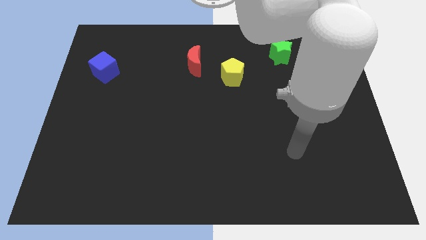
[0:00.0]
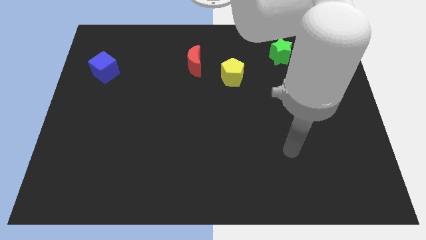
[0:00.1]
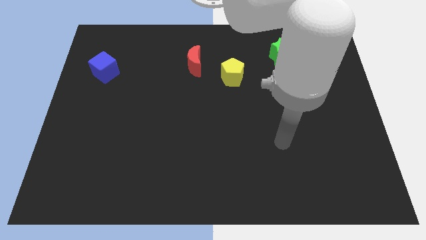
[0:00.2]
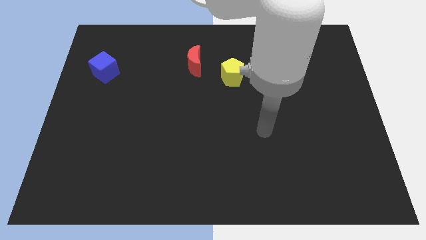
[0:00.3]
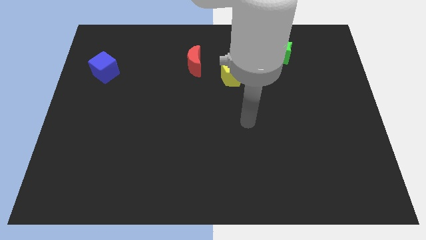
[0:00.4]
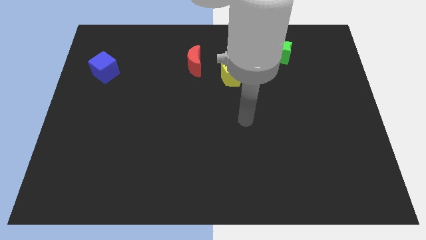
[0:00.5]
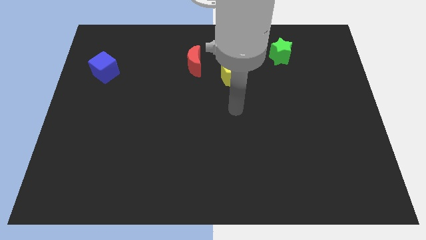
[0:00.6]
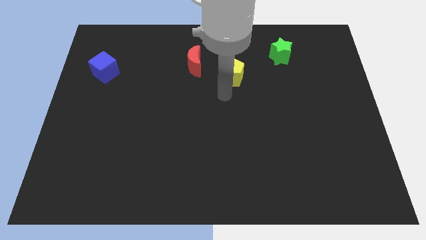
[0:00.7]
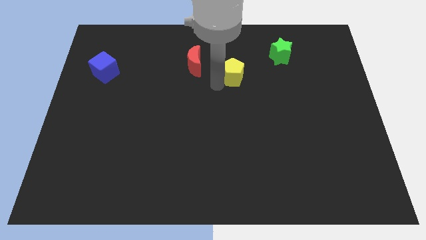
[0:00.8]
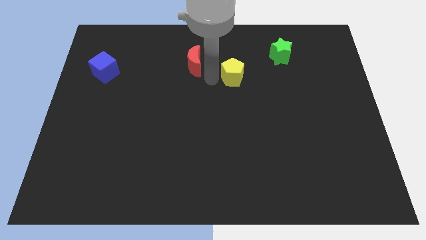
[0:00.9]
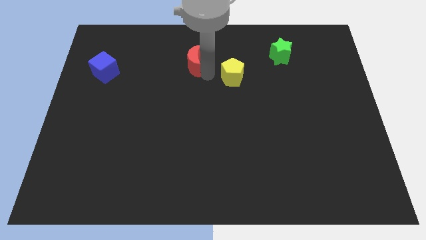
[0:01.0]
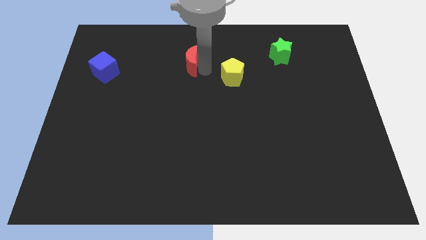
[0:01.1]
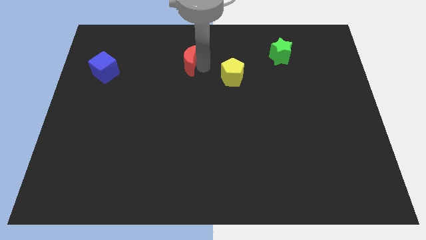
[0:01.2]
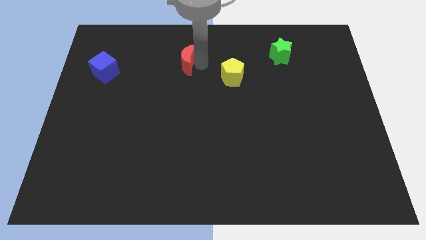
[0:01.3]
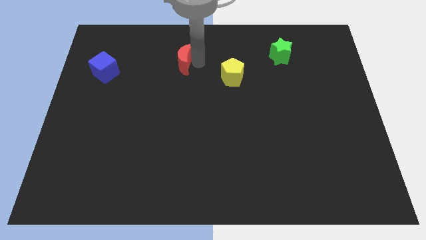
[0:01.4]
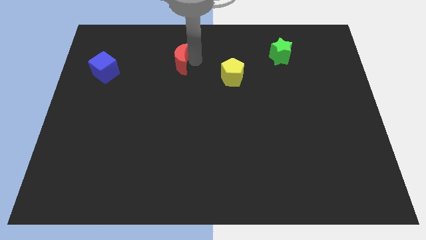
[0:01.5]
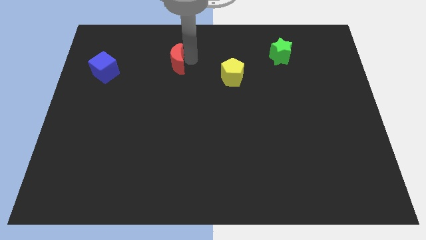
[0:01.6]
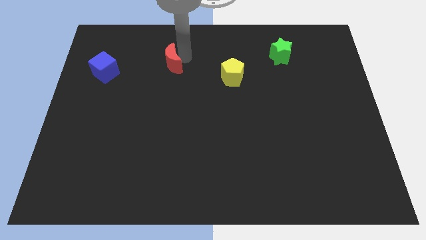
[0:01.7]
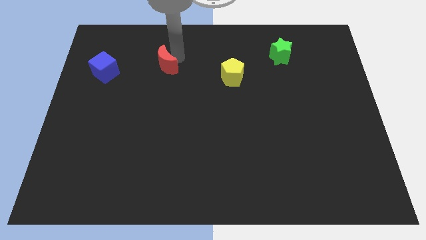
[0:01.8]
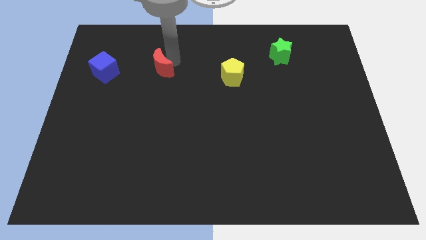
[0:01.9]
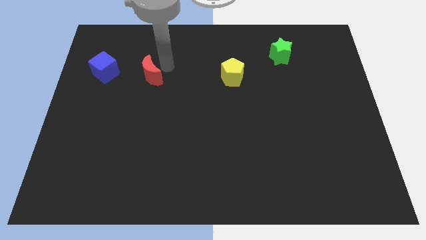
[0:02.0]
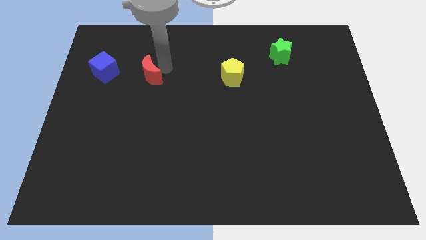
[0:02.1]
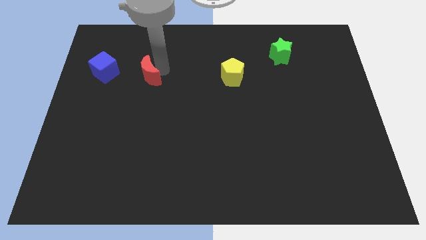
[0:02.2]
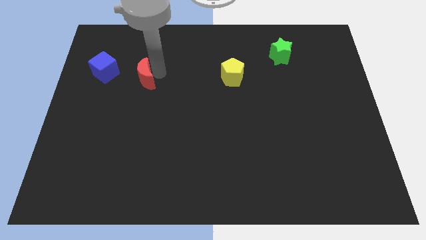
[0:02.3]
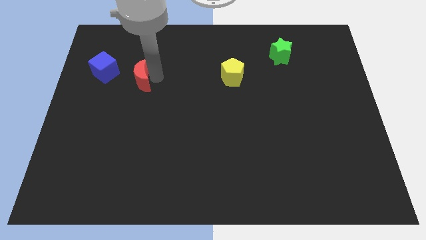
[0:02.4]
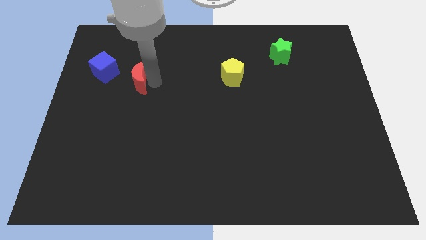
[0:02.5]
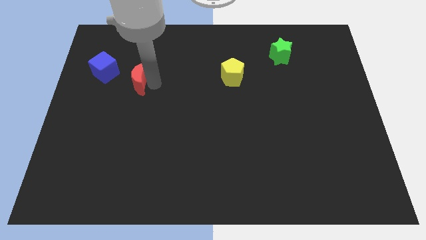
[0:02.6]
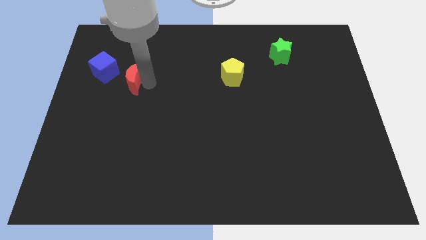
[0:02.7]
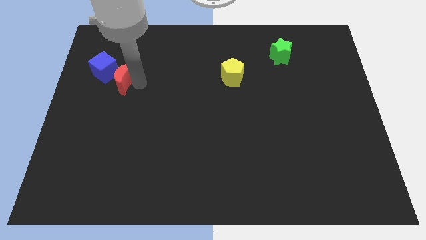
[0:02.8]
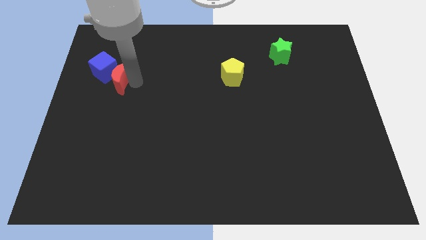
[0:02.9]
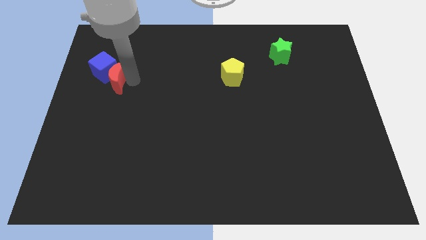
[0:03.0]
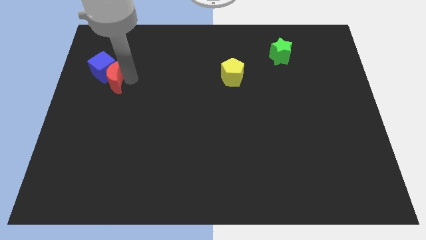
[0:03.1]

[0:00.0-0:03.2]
move the red block next to the blue block

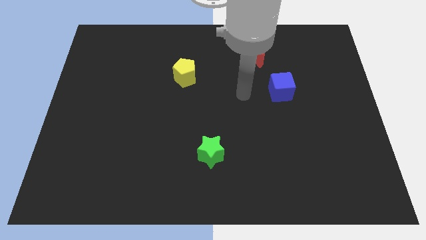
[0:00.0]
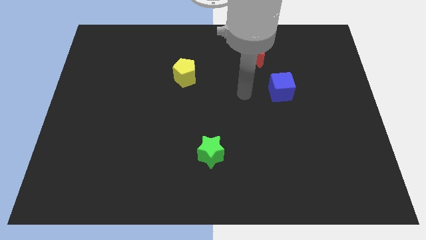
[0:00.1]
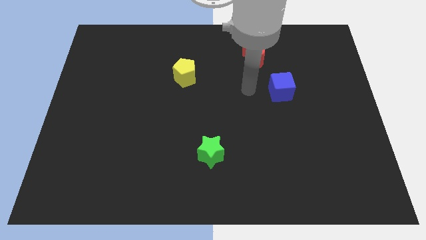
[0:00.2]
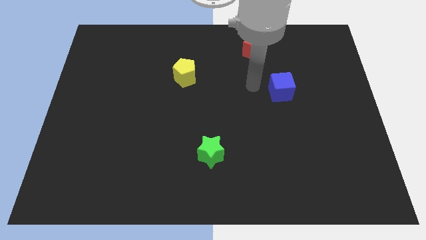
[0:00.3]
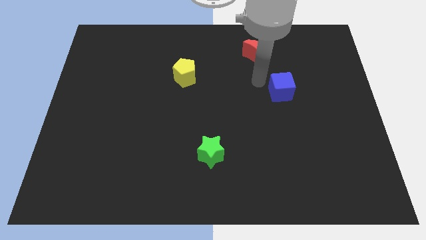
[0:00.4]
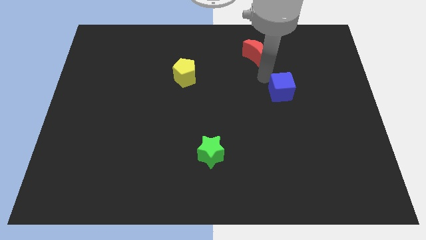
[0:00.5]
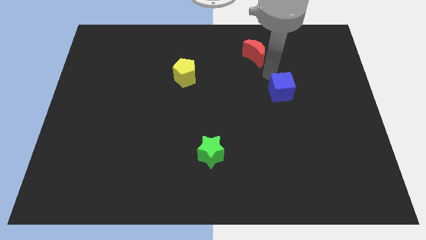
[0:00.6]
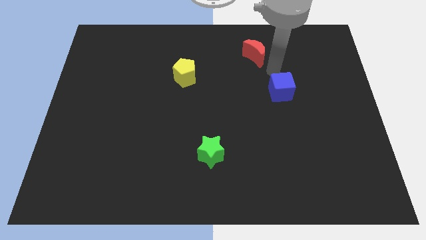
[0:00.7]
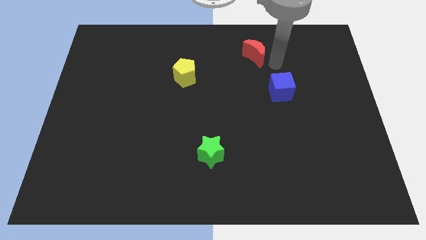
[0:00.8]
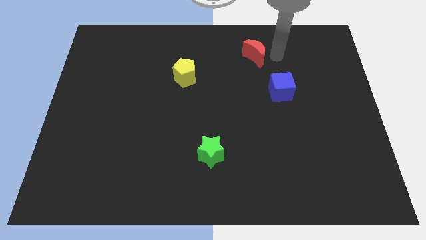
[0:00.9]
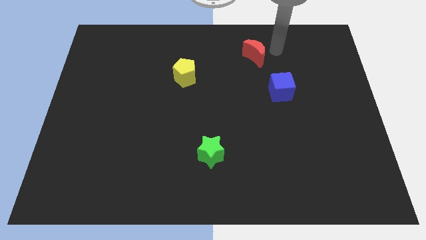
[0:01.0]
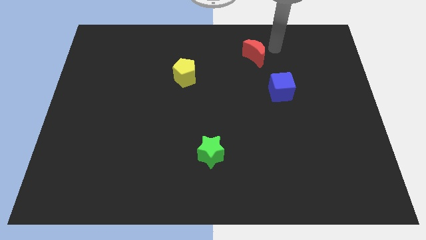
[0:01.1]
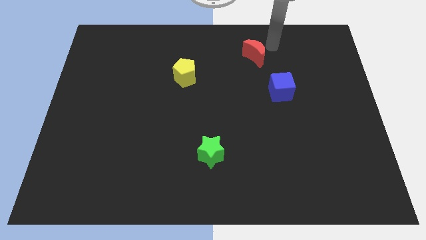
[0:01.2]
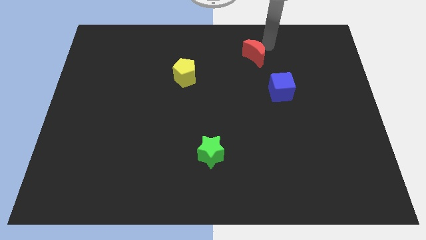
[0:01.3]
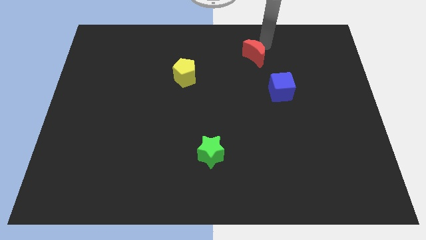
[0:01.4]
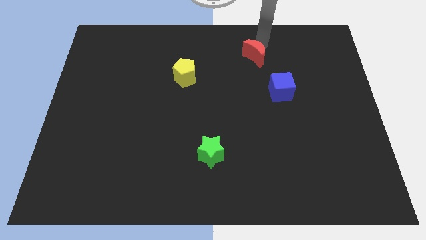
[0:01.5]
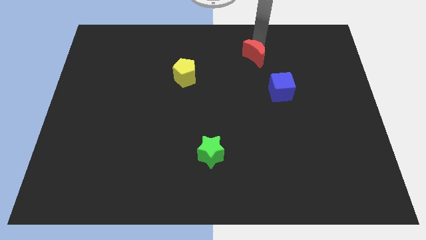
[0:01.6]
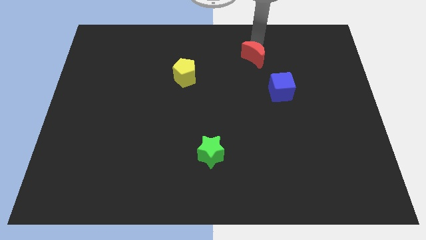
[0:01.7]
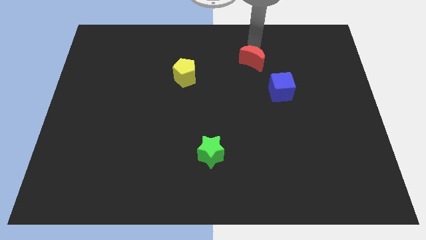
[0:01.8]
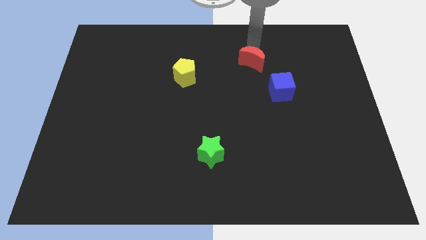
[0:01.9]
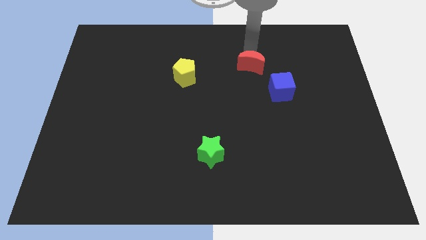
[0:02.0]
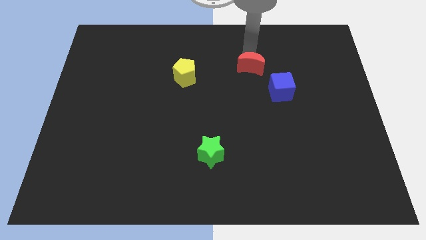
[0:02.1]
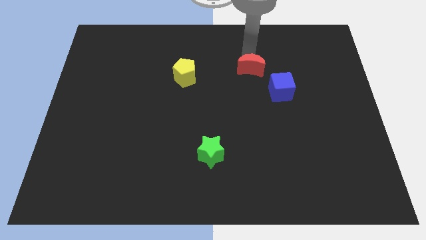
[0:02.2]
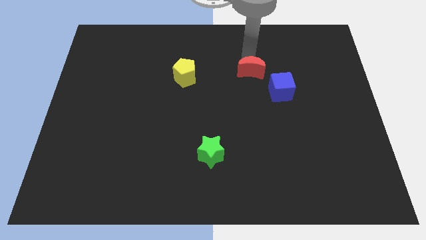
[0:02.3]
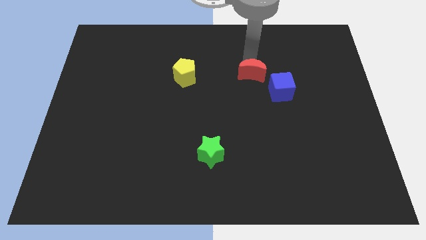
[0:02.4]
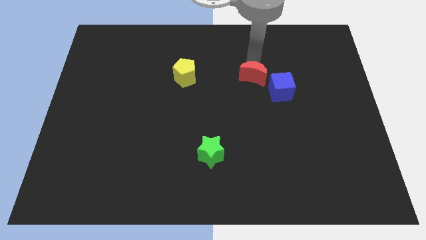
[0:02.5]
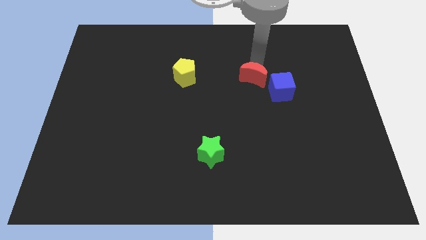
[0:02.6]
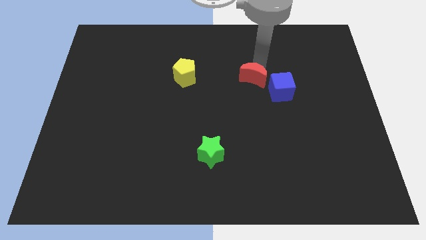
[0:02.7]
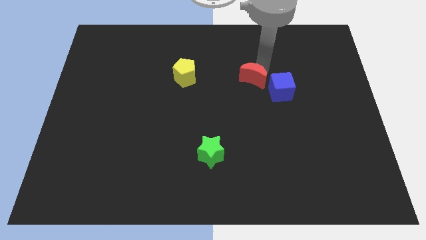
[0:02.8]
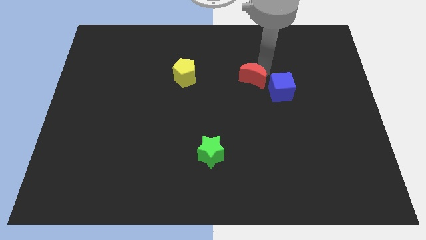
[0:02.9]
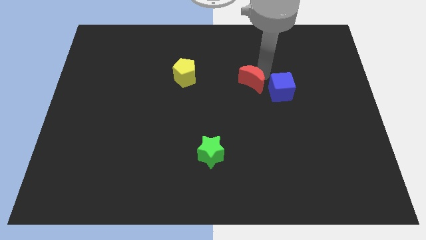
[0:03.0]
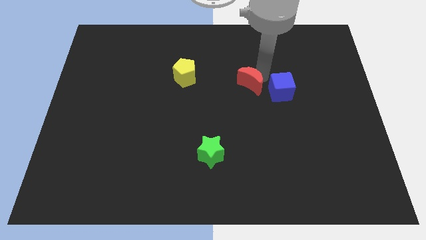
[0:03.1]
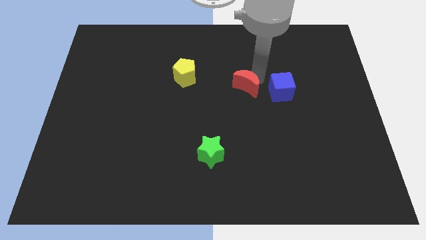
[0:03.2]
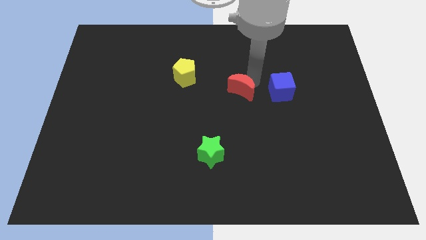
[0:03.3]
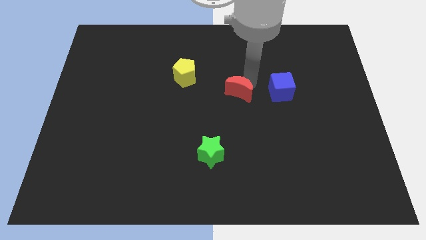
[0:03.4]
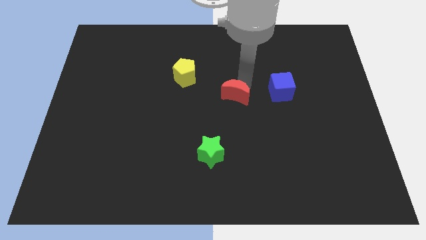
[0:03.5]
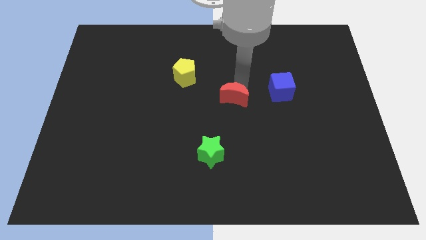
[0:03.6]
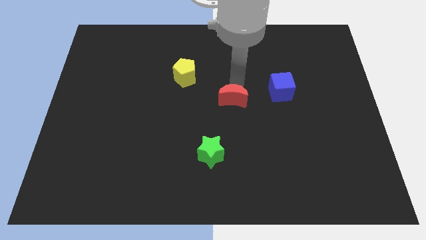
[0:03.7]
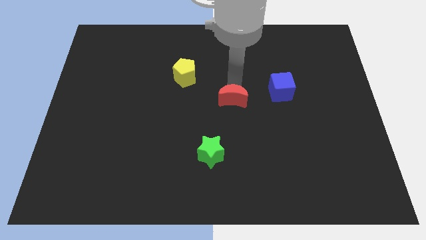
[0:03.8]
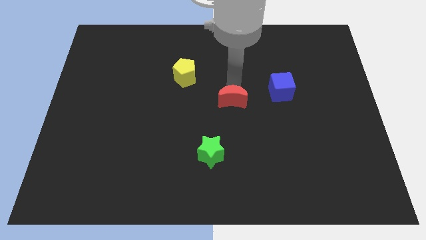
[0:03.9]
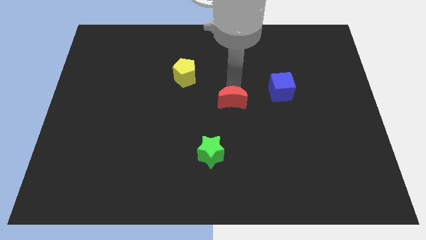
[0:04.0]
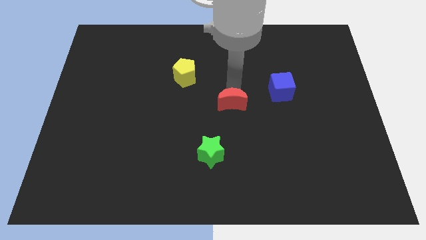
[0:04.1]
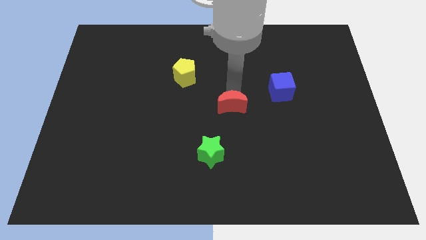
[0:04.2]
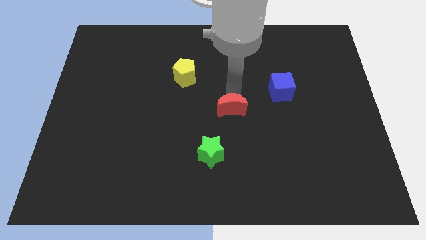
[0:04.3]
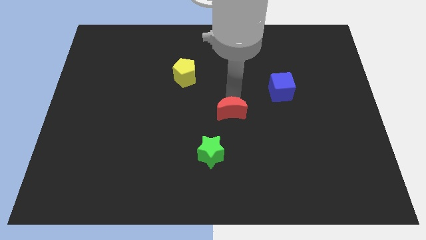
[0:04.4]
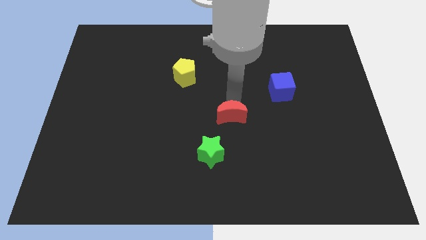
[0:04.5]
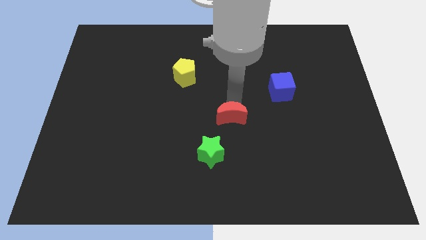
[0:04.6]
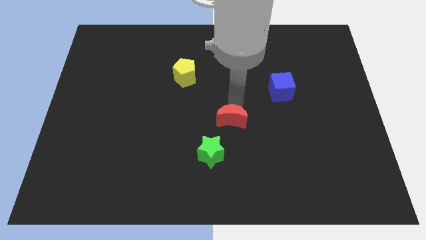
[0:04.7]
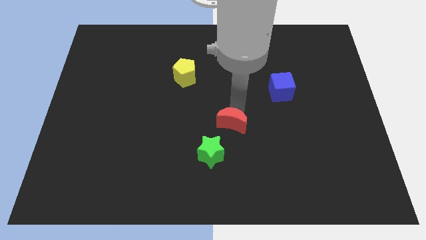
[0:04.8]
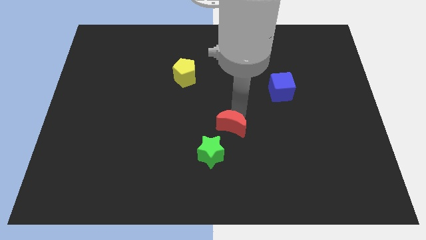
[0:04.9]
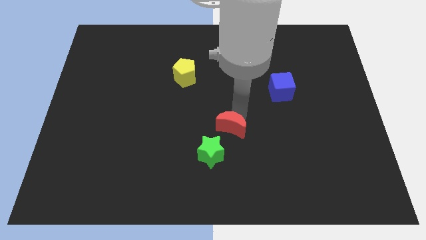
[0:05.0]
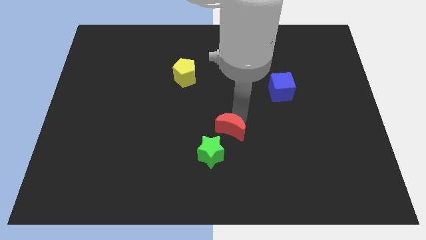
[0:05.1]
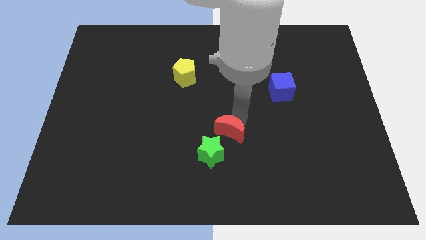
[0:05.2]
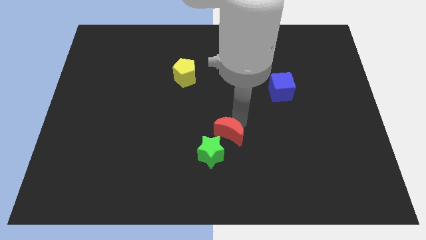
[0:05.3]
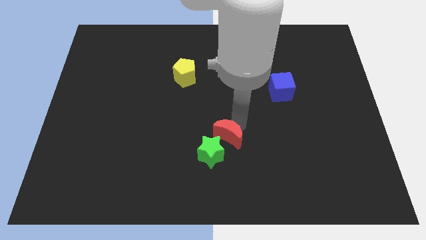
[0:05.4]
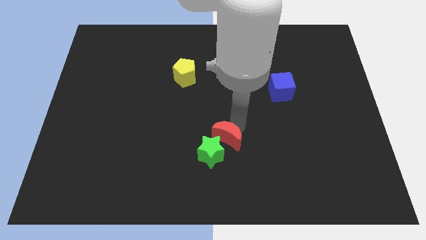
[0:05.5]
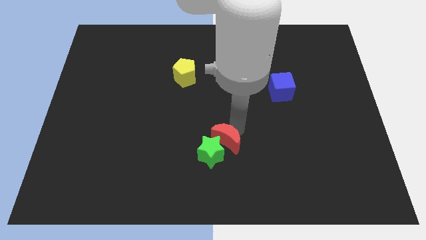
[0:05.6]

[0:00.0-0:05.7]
move the red moon close to the green star
